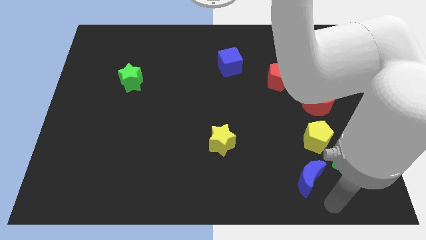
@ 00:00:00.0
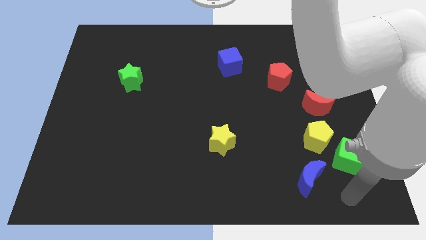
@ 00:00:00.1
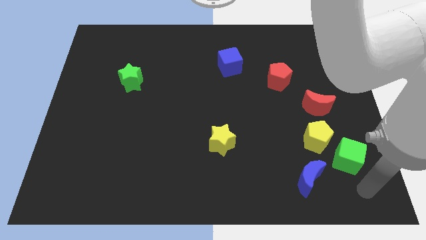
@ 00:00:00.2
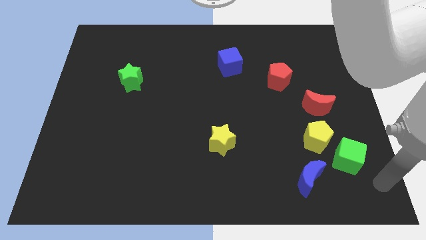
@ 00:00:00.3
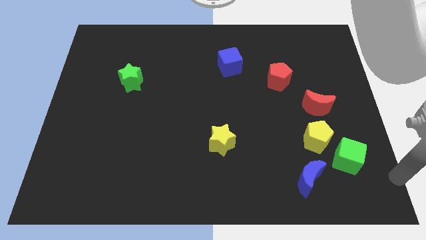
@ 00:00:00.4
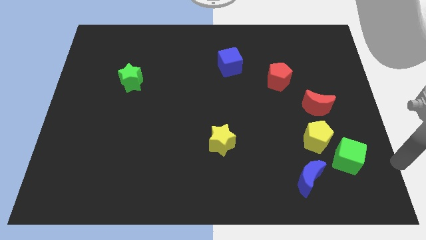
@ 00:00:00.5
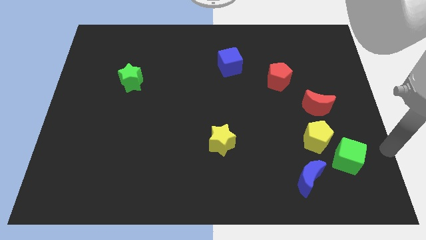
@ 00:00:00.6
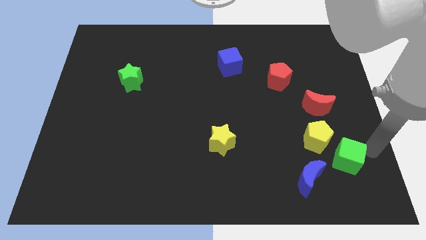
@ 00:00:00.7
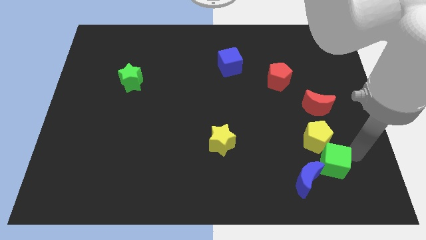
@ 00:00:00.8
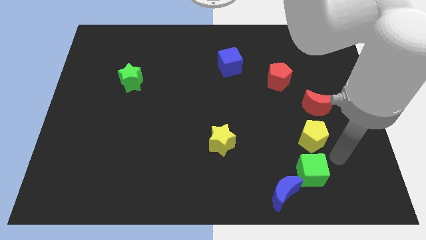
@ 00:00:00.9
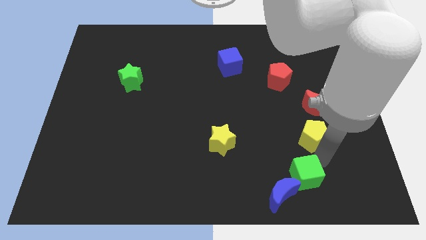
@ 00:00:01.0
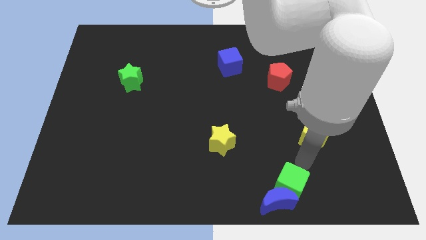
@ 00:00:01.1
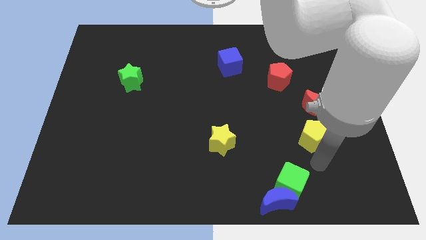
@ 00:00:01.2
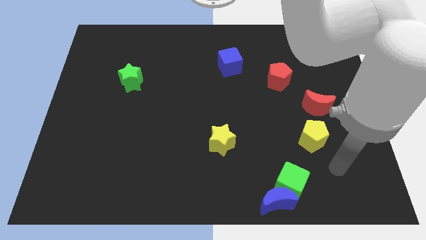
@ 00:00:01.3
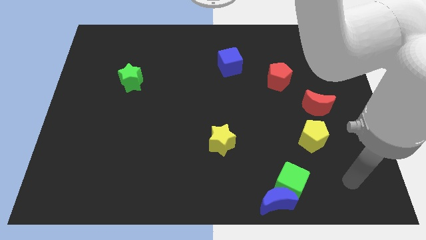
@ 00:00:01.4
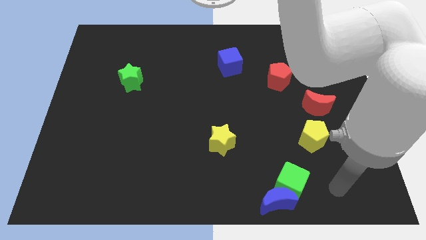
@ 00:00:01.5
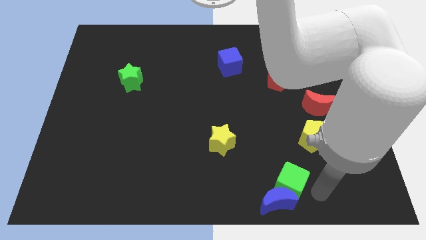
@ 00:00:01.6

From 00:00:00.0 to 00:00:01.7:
push the green cube into the blue moon

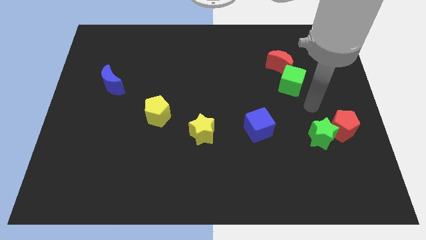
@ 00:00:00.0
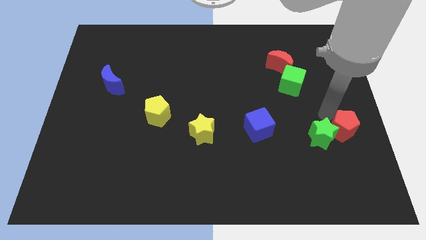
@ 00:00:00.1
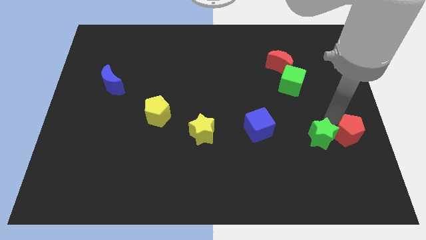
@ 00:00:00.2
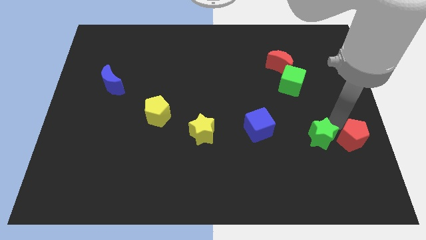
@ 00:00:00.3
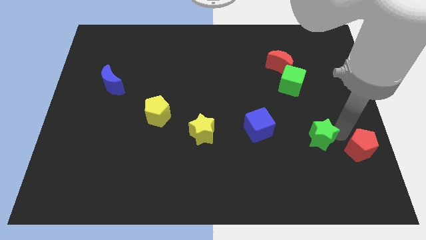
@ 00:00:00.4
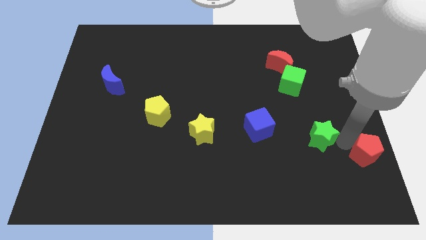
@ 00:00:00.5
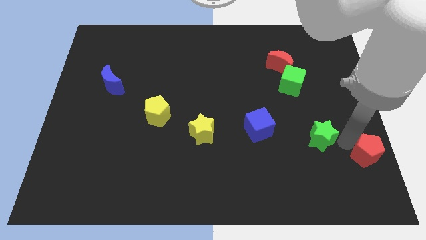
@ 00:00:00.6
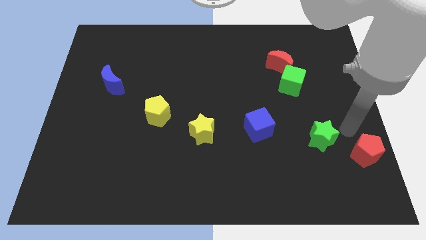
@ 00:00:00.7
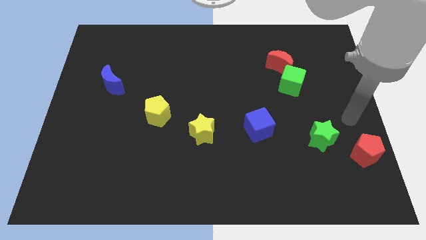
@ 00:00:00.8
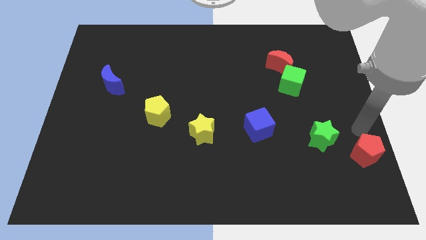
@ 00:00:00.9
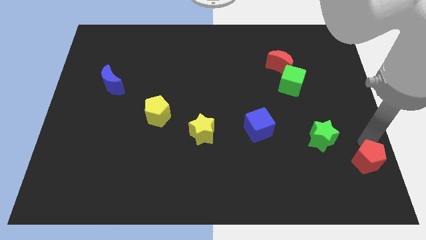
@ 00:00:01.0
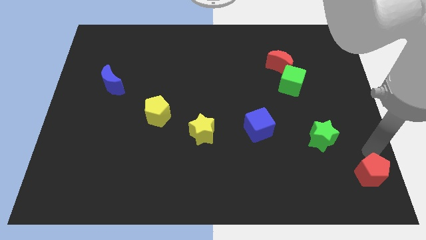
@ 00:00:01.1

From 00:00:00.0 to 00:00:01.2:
separate the red pentagon from green star

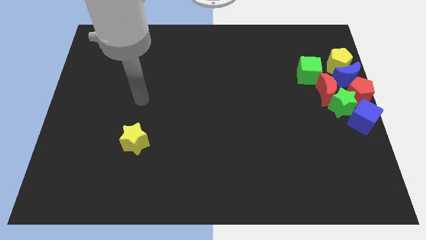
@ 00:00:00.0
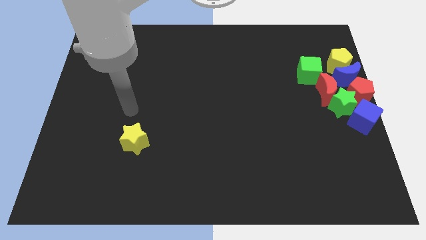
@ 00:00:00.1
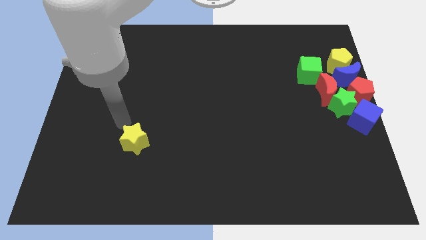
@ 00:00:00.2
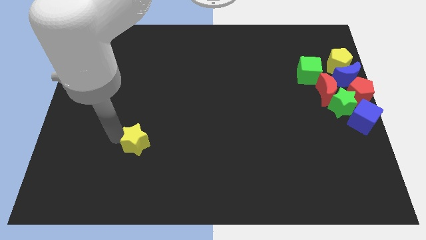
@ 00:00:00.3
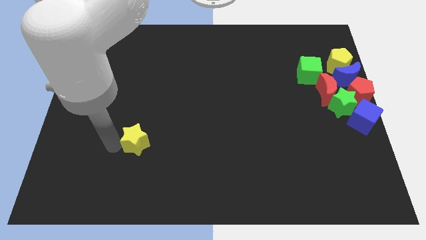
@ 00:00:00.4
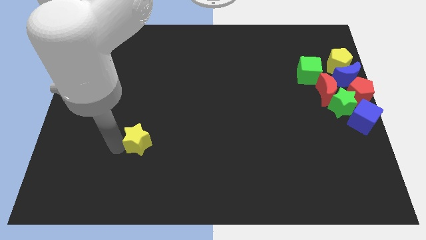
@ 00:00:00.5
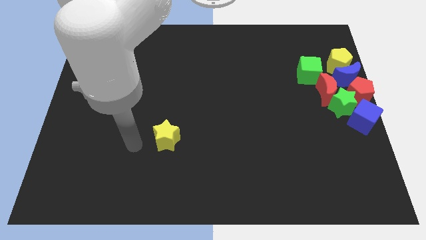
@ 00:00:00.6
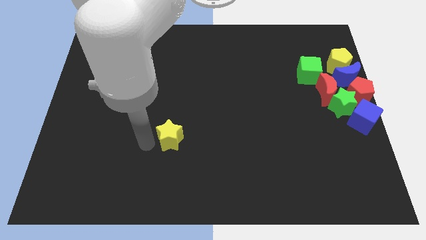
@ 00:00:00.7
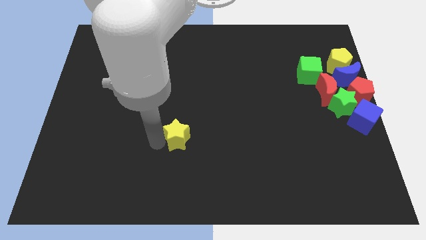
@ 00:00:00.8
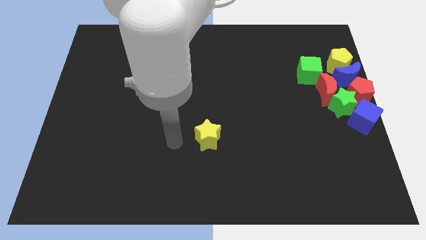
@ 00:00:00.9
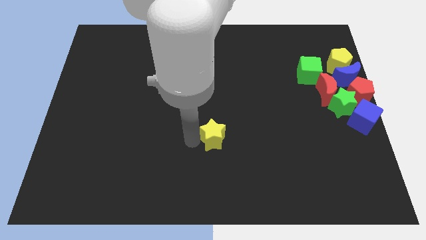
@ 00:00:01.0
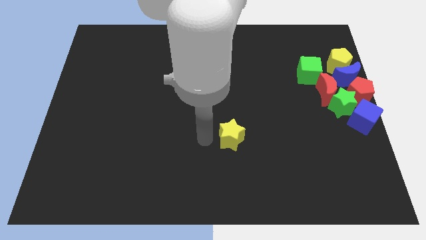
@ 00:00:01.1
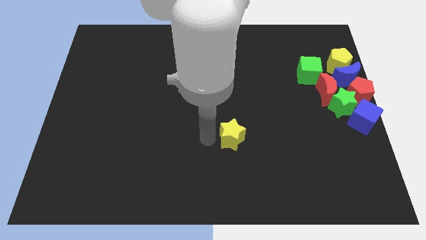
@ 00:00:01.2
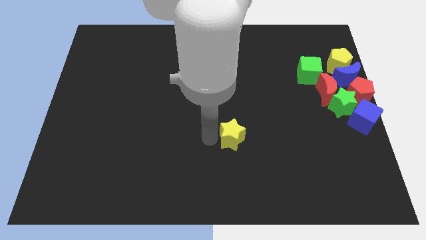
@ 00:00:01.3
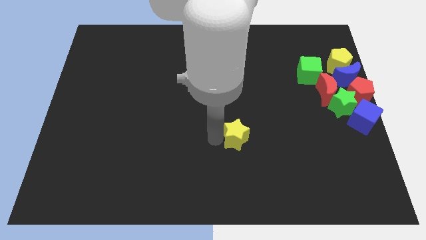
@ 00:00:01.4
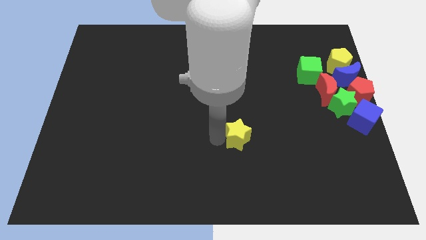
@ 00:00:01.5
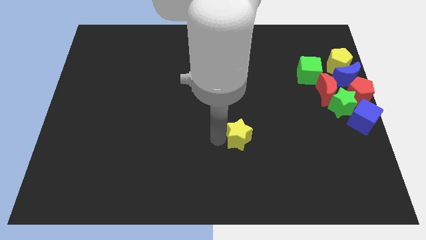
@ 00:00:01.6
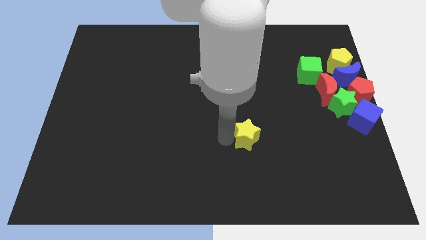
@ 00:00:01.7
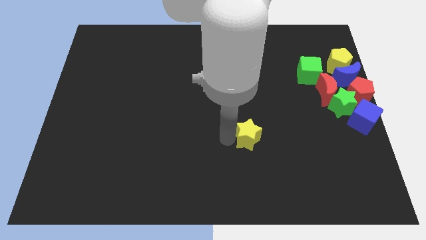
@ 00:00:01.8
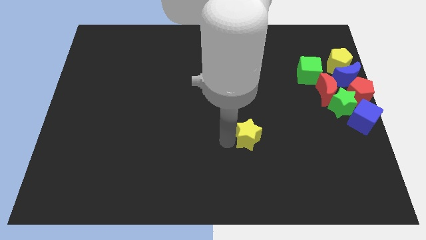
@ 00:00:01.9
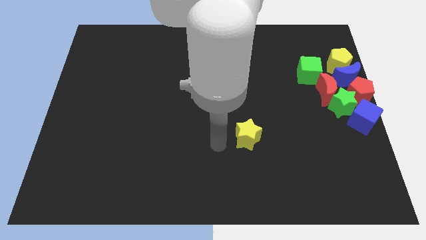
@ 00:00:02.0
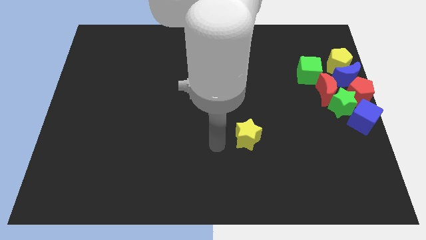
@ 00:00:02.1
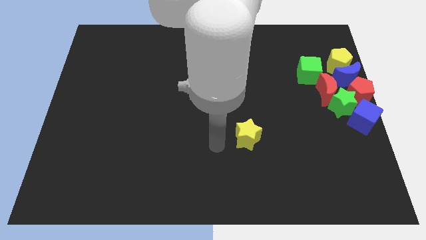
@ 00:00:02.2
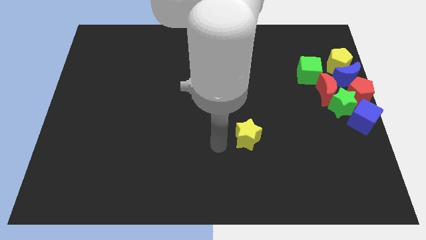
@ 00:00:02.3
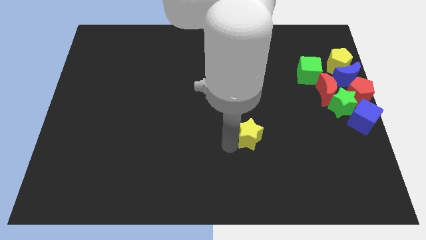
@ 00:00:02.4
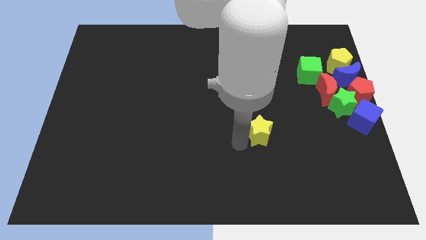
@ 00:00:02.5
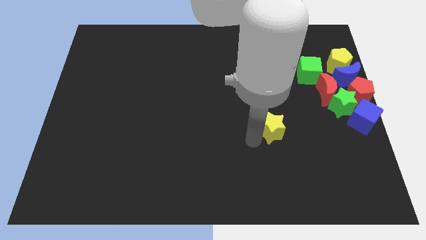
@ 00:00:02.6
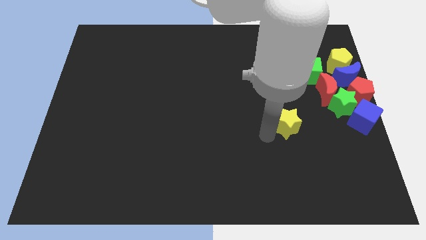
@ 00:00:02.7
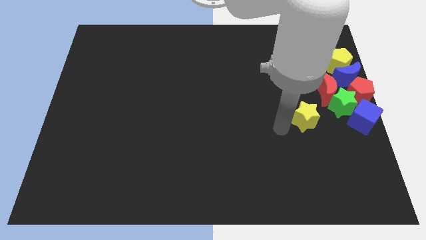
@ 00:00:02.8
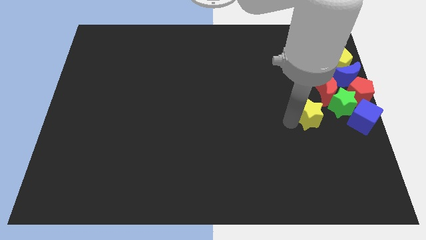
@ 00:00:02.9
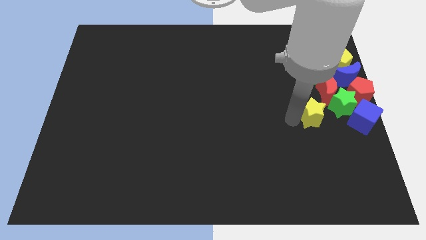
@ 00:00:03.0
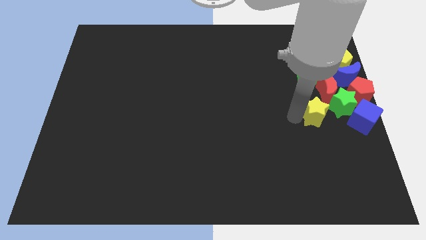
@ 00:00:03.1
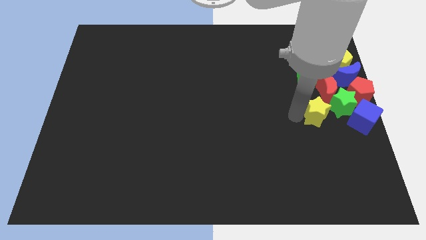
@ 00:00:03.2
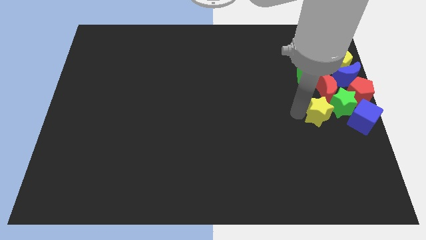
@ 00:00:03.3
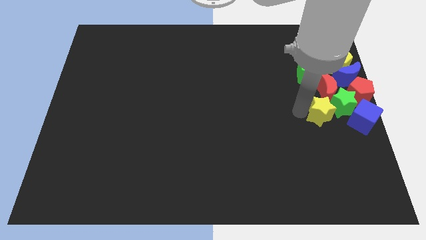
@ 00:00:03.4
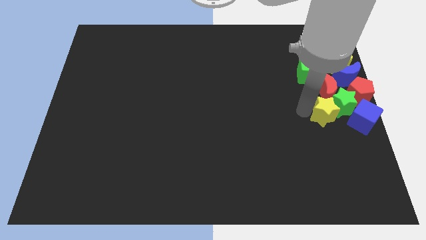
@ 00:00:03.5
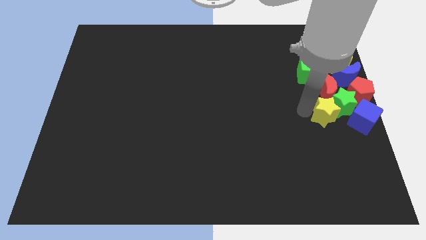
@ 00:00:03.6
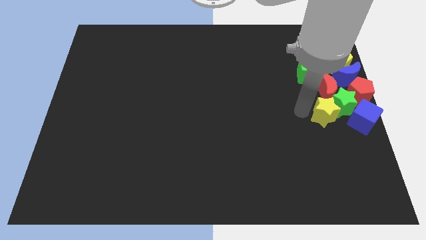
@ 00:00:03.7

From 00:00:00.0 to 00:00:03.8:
pull the yellow star into the green star

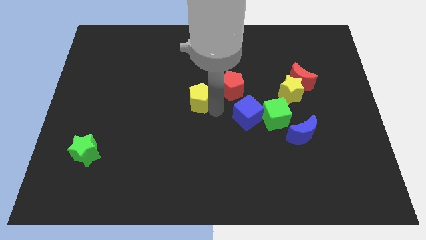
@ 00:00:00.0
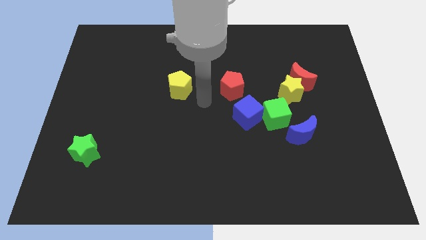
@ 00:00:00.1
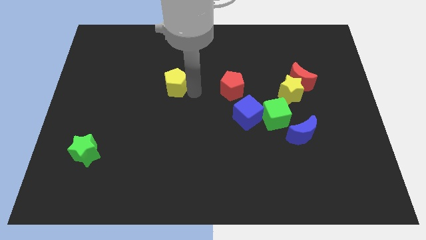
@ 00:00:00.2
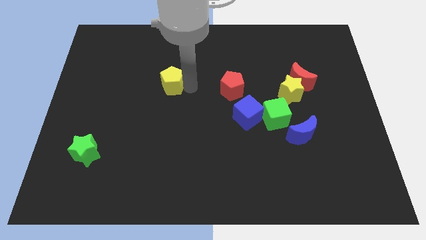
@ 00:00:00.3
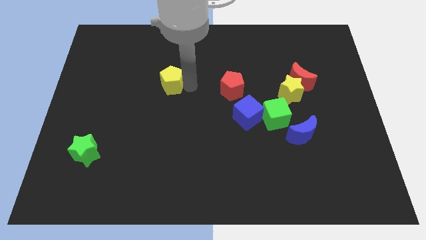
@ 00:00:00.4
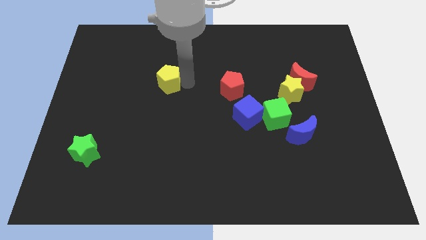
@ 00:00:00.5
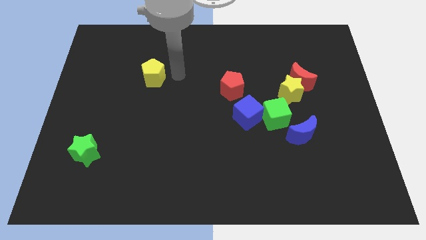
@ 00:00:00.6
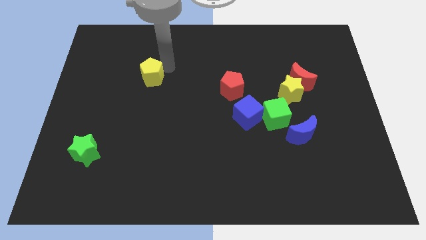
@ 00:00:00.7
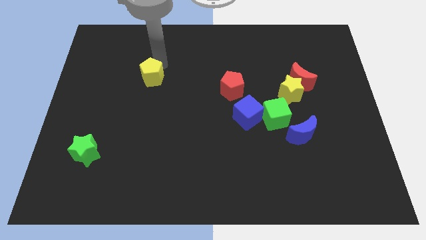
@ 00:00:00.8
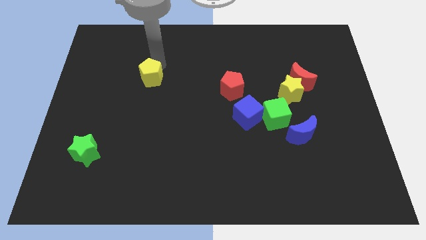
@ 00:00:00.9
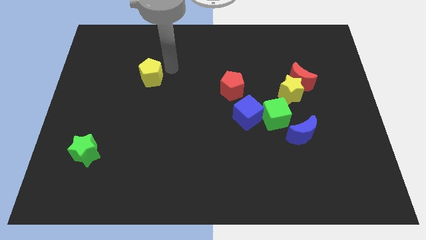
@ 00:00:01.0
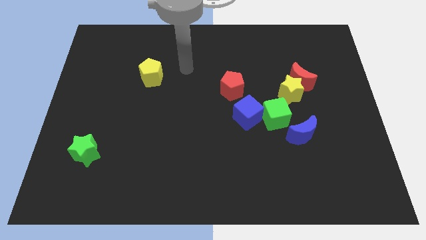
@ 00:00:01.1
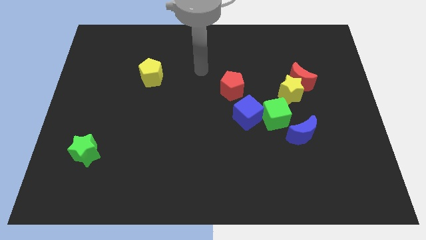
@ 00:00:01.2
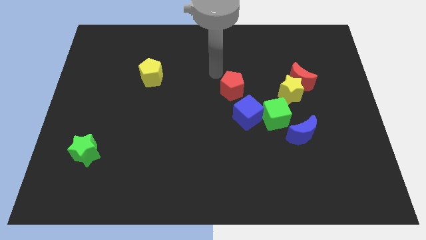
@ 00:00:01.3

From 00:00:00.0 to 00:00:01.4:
place the yellow pentagon diagonally top left to the red pentagon

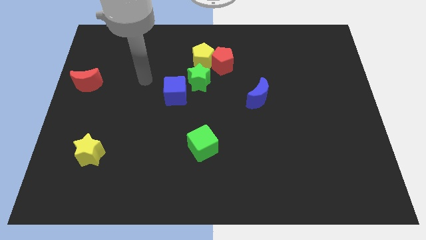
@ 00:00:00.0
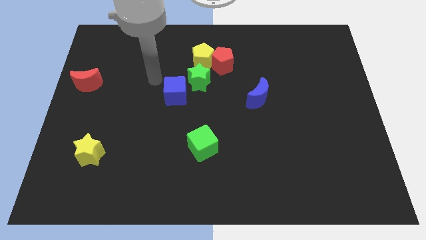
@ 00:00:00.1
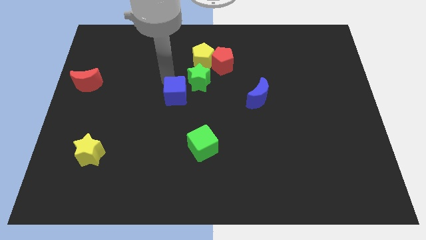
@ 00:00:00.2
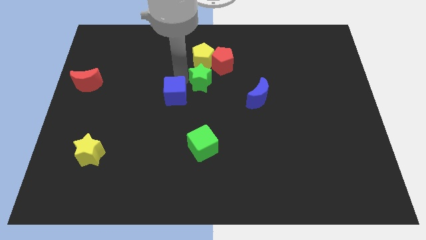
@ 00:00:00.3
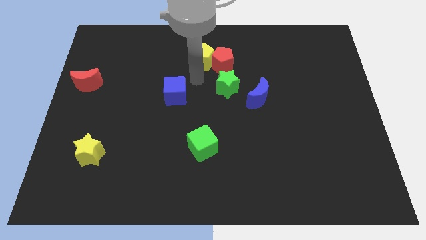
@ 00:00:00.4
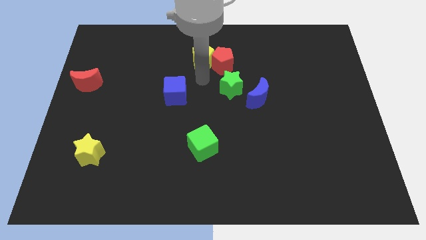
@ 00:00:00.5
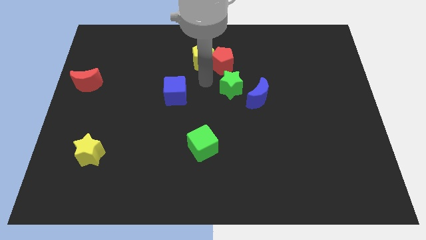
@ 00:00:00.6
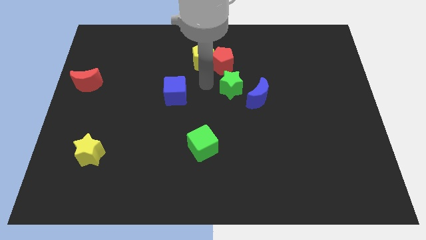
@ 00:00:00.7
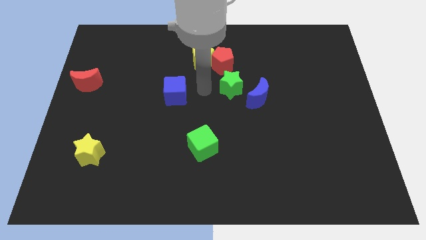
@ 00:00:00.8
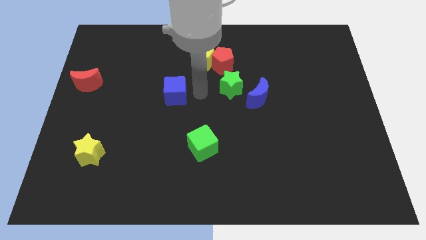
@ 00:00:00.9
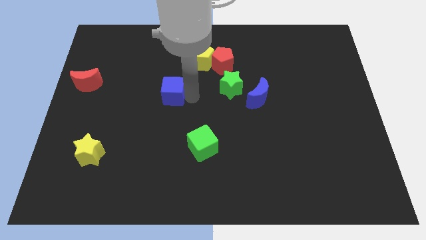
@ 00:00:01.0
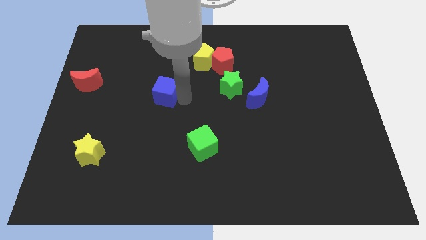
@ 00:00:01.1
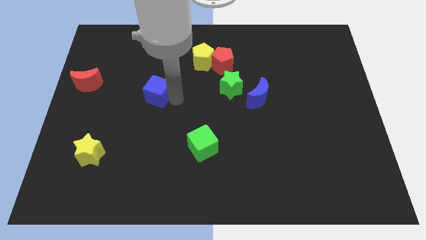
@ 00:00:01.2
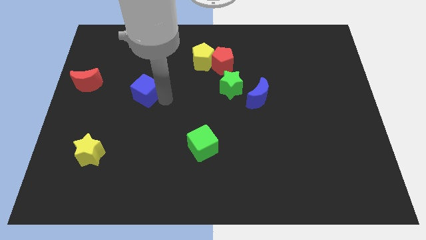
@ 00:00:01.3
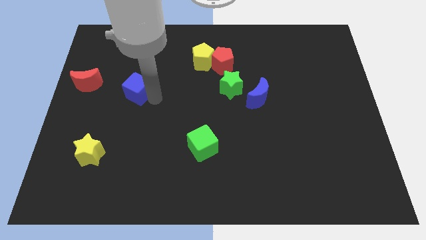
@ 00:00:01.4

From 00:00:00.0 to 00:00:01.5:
separate the green star and the blue cube
